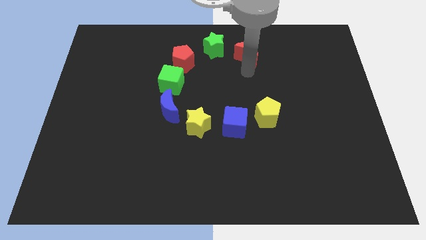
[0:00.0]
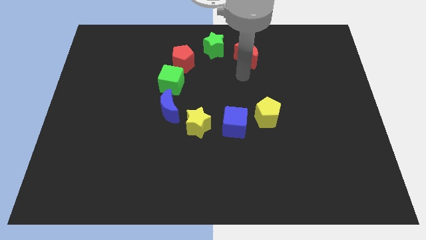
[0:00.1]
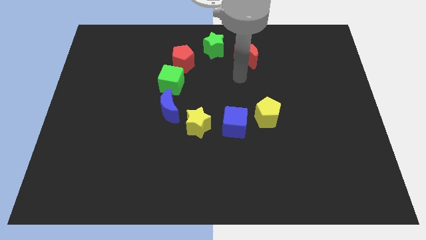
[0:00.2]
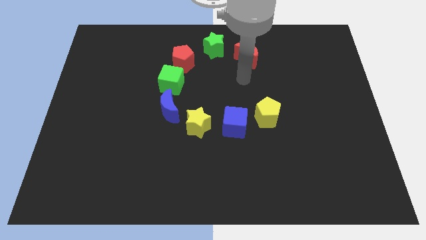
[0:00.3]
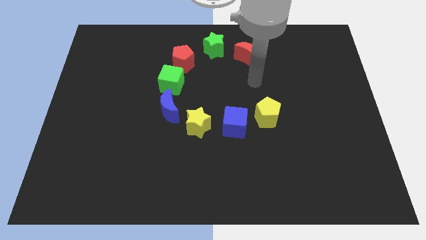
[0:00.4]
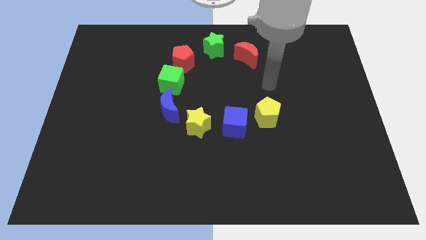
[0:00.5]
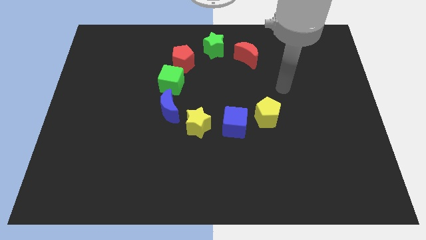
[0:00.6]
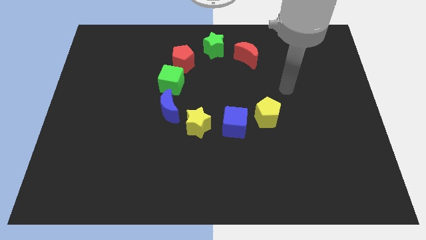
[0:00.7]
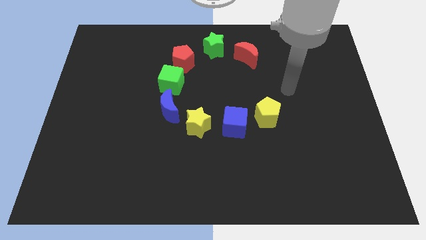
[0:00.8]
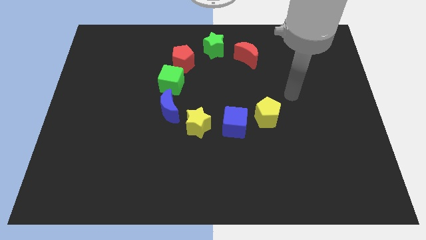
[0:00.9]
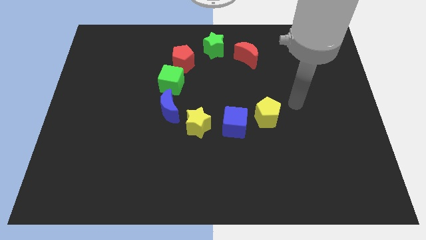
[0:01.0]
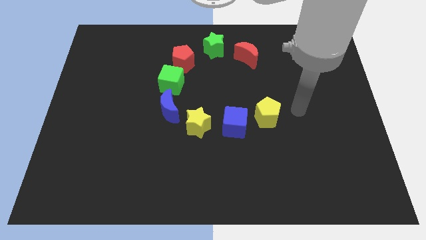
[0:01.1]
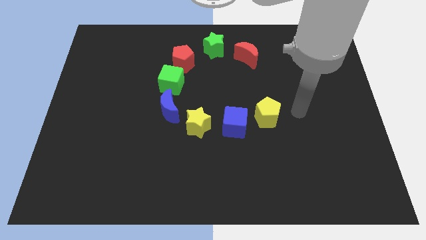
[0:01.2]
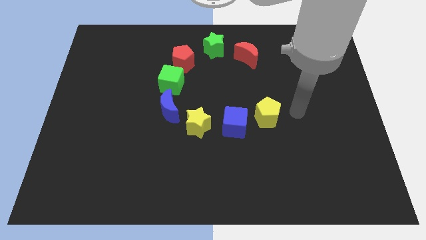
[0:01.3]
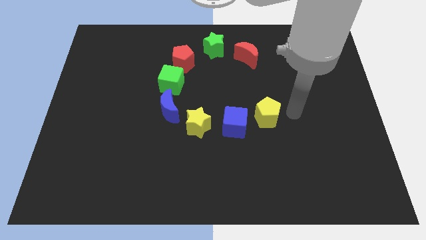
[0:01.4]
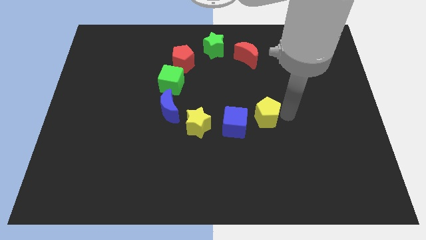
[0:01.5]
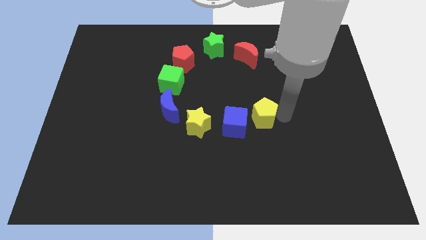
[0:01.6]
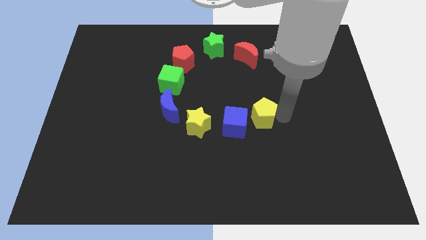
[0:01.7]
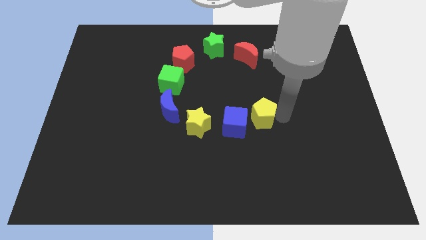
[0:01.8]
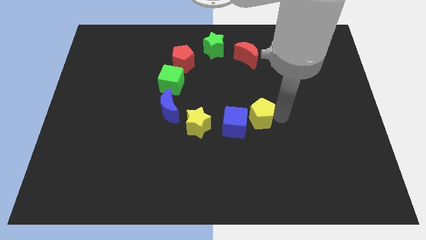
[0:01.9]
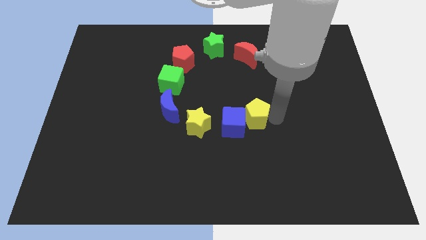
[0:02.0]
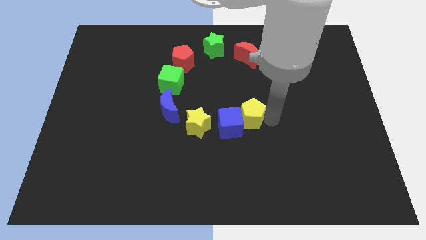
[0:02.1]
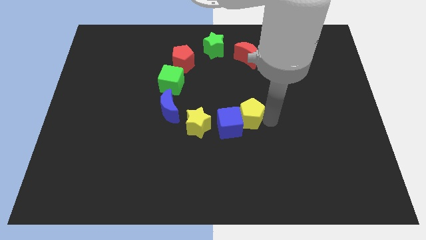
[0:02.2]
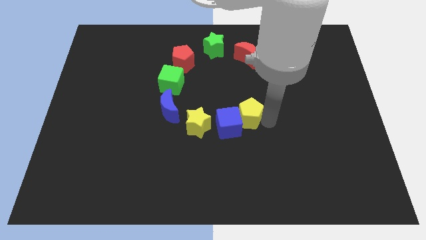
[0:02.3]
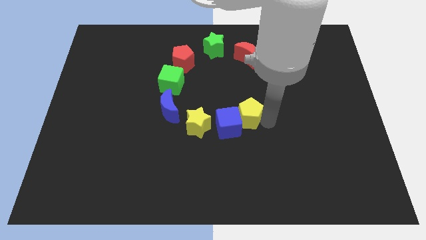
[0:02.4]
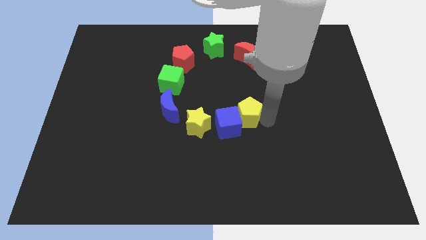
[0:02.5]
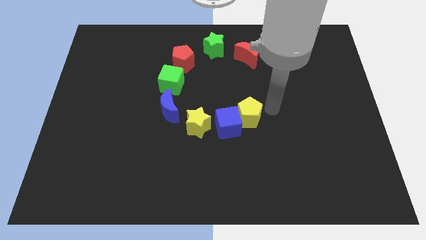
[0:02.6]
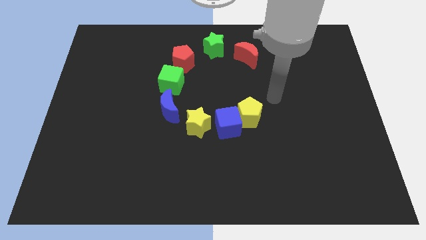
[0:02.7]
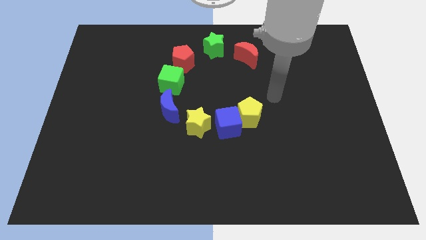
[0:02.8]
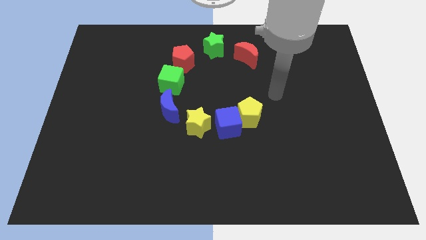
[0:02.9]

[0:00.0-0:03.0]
push the yellow pentagon to the right of the blue cube

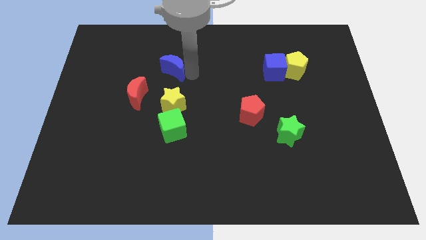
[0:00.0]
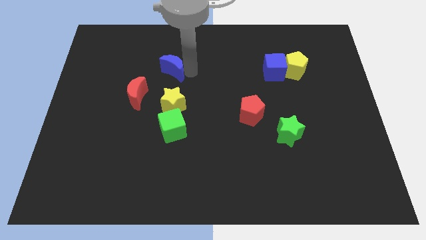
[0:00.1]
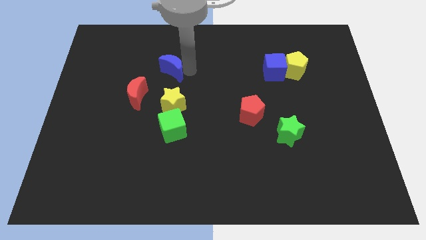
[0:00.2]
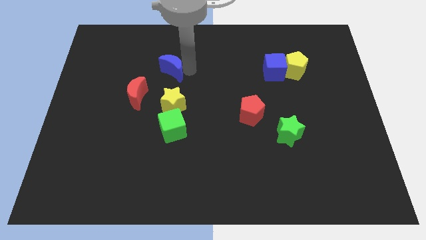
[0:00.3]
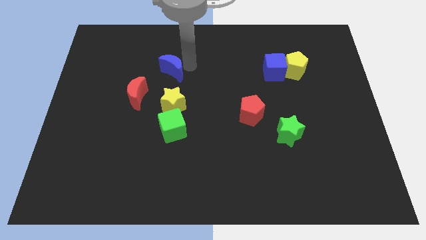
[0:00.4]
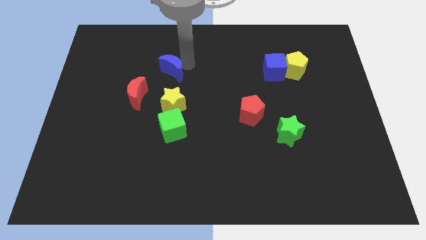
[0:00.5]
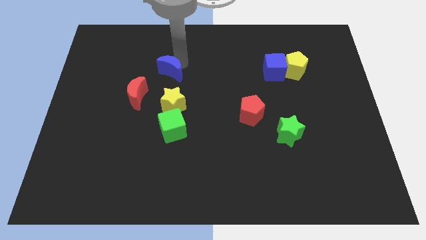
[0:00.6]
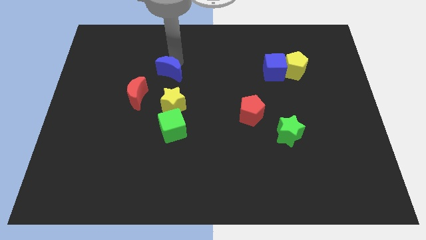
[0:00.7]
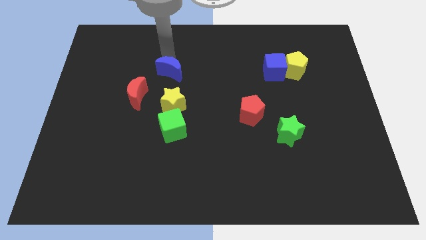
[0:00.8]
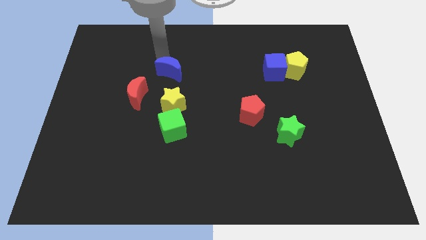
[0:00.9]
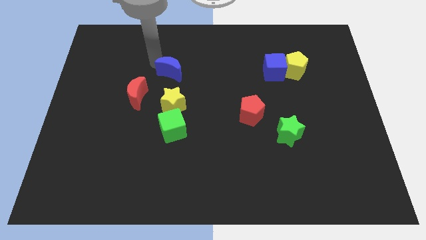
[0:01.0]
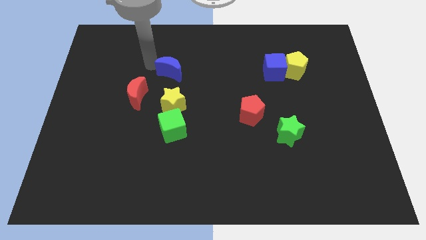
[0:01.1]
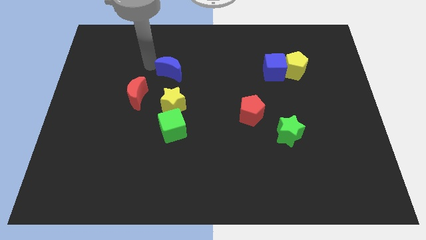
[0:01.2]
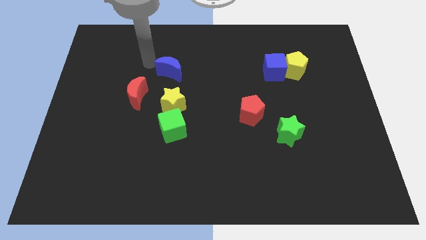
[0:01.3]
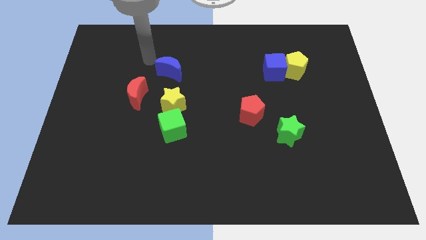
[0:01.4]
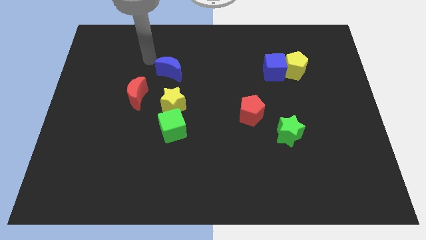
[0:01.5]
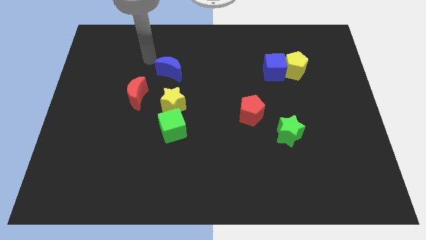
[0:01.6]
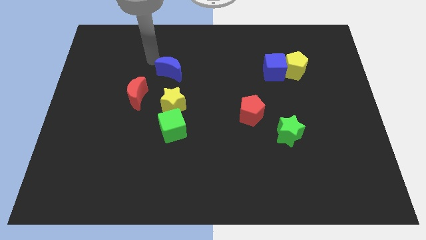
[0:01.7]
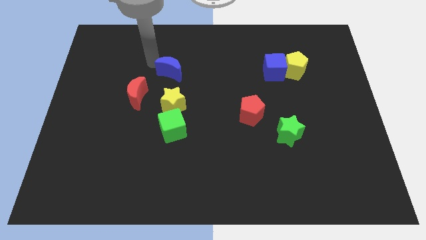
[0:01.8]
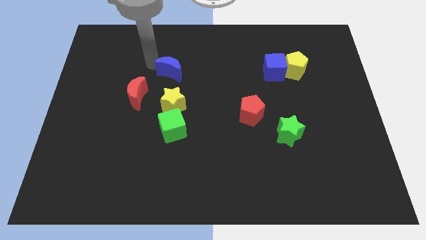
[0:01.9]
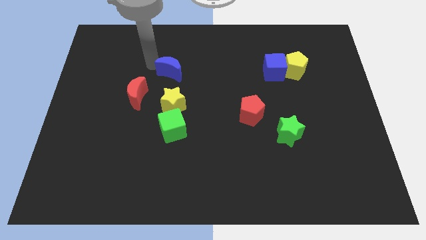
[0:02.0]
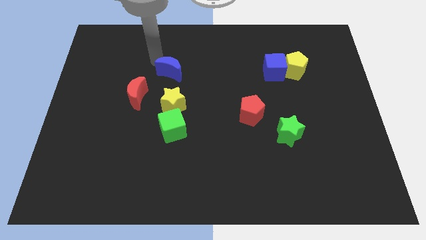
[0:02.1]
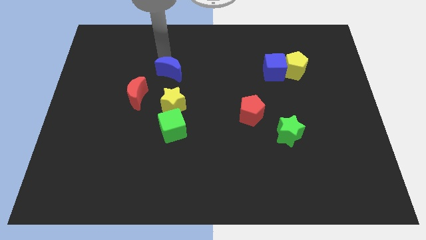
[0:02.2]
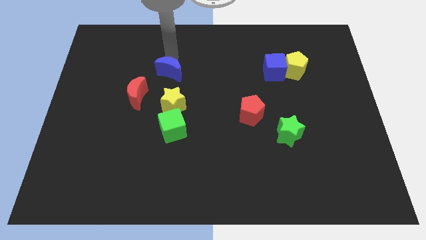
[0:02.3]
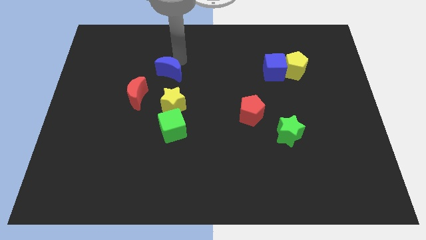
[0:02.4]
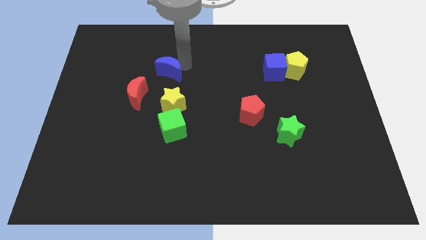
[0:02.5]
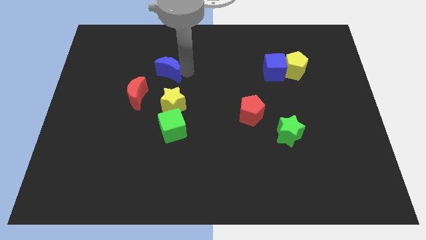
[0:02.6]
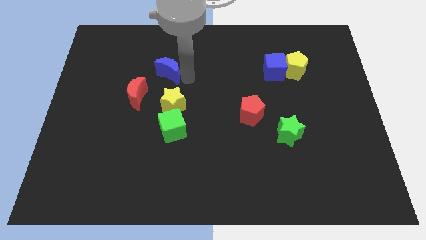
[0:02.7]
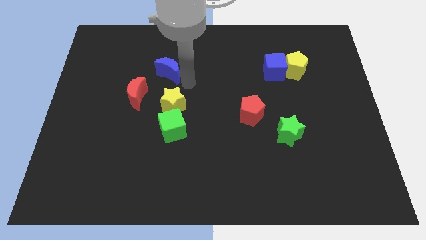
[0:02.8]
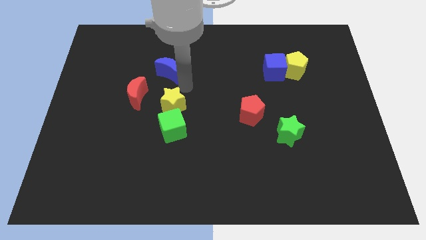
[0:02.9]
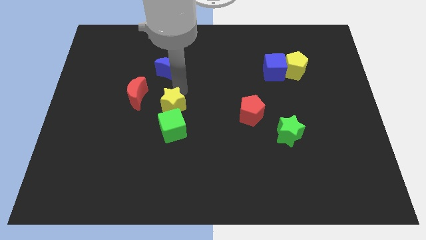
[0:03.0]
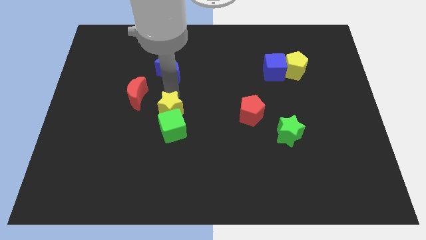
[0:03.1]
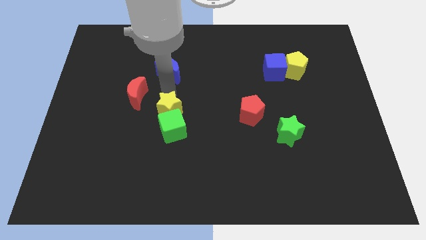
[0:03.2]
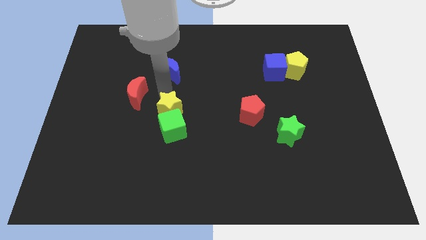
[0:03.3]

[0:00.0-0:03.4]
slightly move the yellow star into the green cube

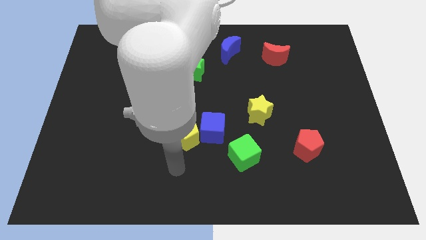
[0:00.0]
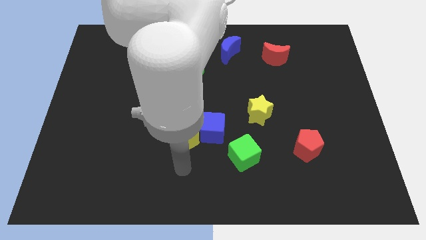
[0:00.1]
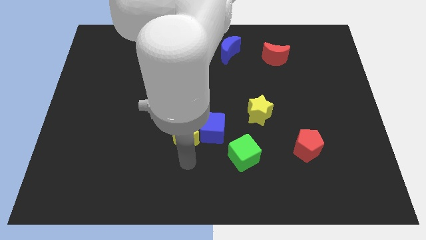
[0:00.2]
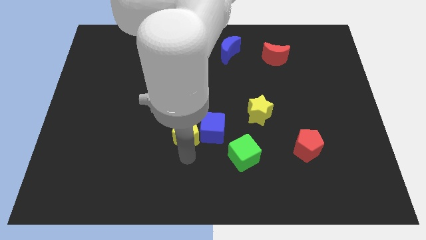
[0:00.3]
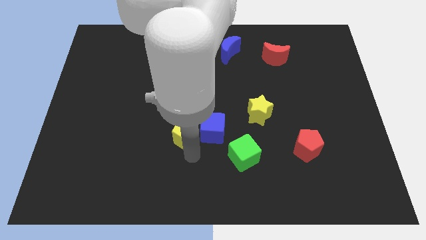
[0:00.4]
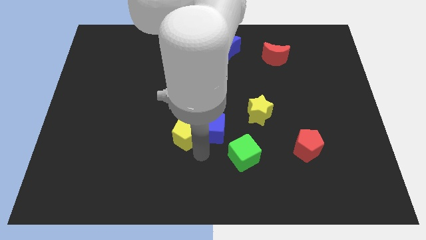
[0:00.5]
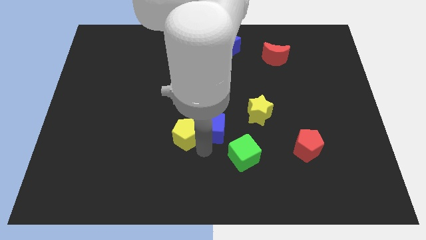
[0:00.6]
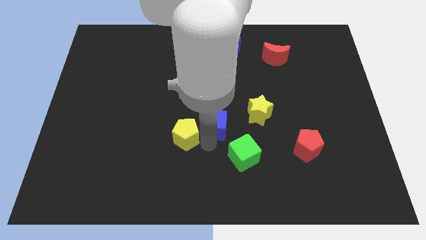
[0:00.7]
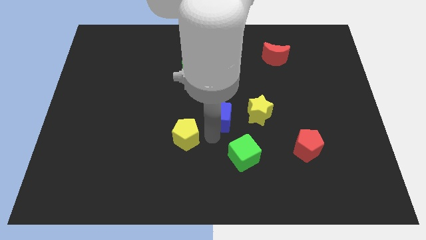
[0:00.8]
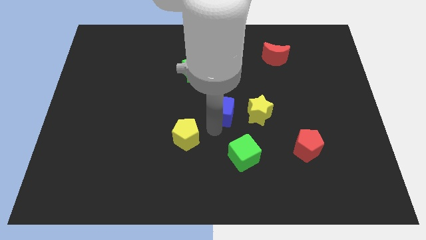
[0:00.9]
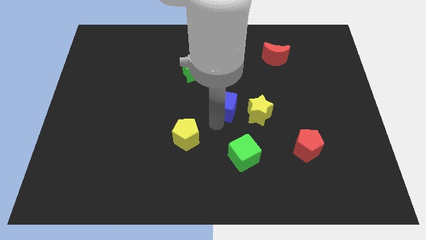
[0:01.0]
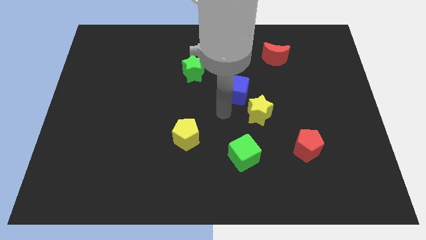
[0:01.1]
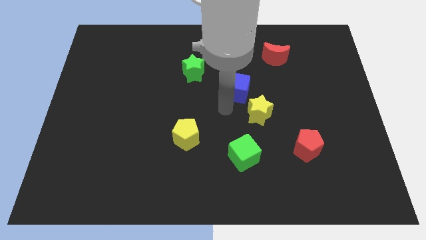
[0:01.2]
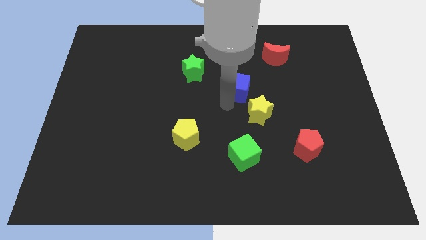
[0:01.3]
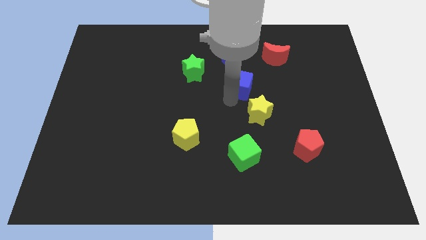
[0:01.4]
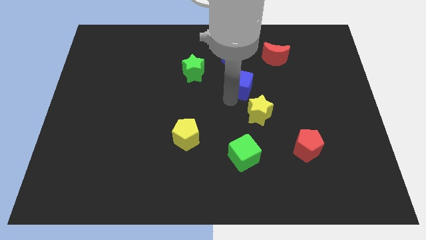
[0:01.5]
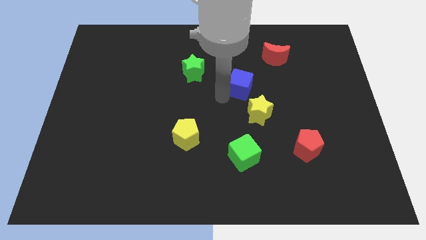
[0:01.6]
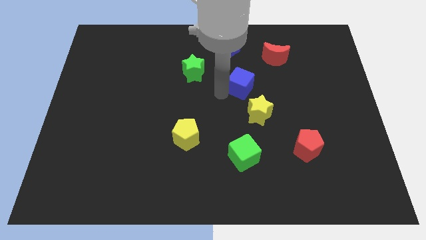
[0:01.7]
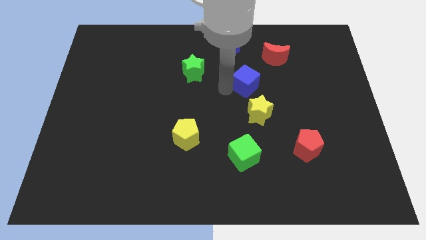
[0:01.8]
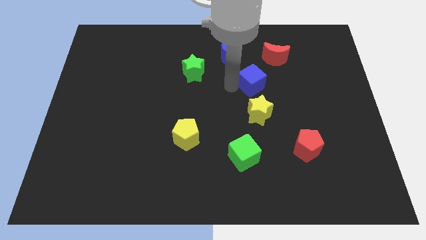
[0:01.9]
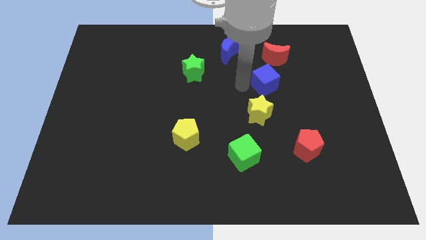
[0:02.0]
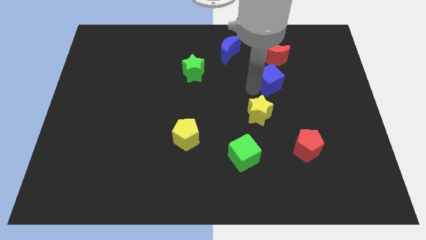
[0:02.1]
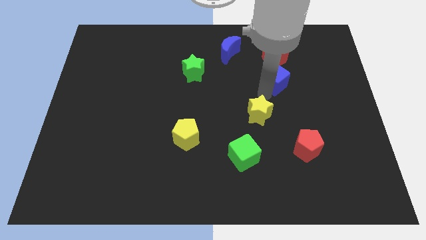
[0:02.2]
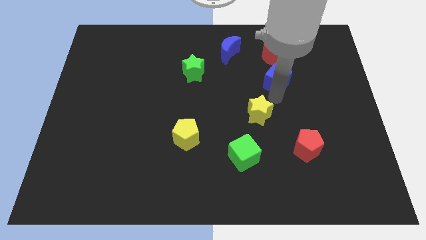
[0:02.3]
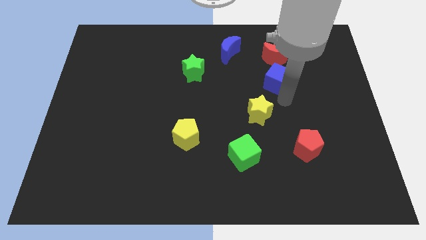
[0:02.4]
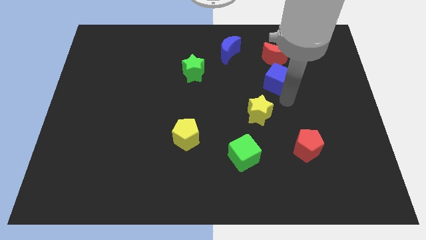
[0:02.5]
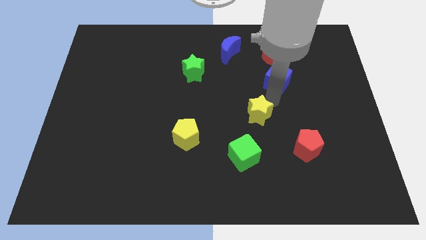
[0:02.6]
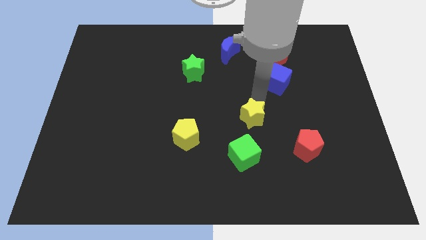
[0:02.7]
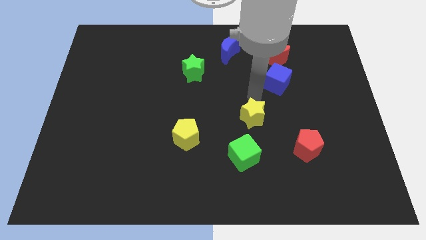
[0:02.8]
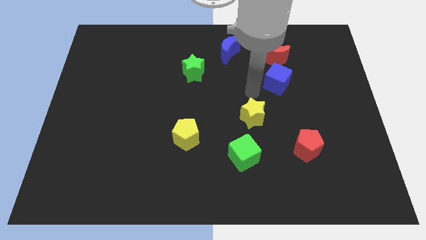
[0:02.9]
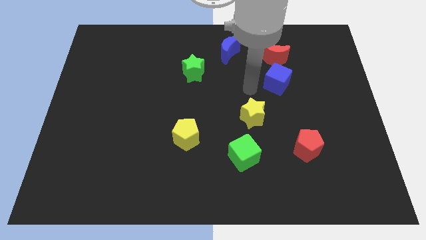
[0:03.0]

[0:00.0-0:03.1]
separate blue cube from yellow pentagon
